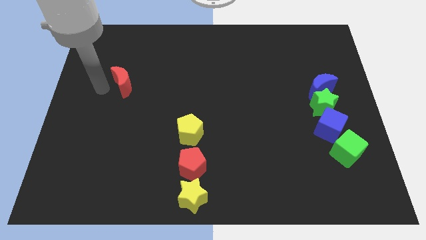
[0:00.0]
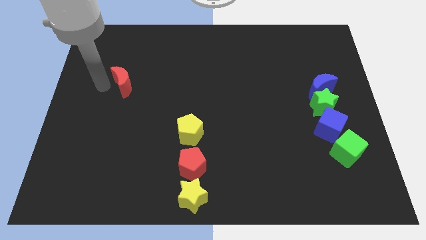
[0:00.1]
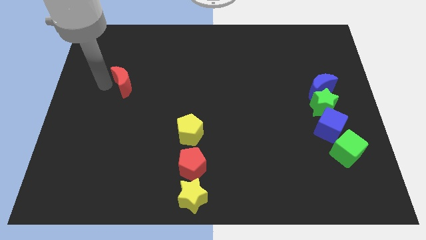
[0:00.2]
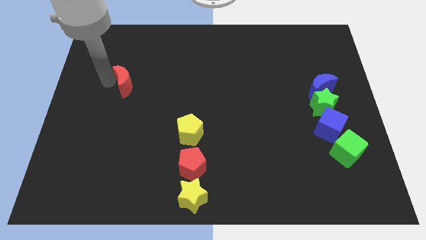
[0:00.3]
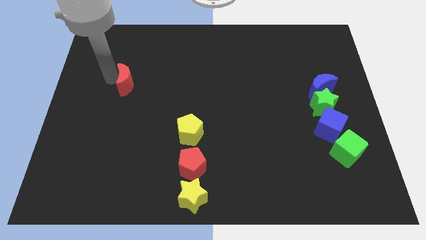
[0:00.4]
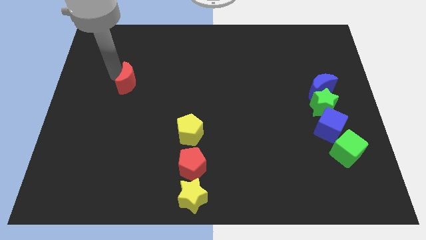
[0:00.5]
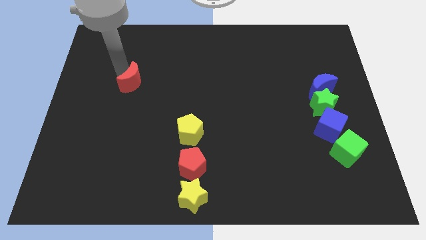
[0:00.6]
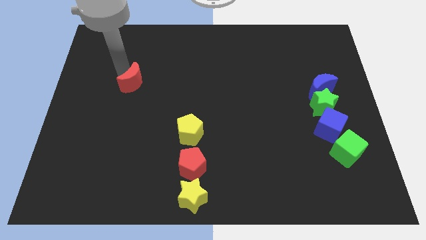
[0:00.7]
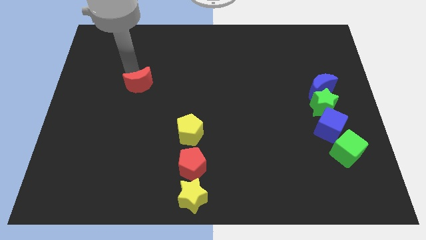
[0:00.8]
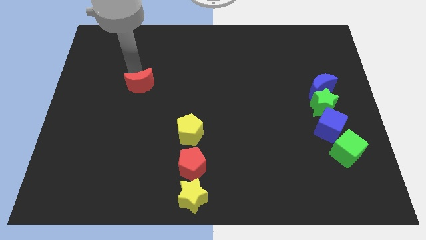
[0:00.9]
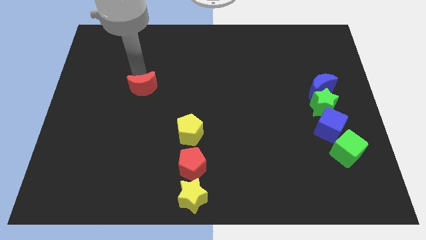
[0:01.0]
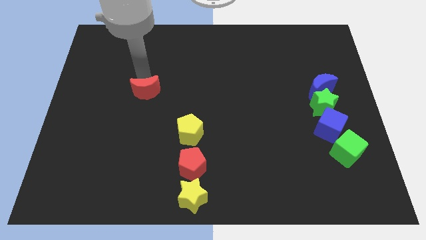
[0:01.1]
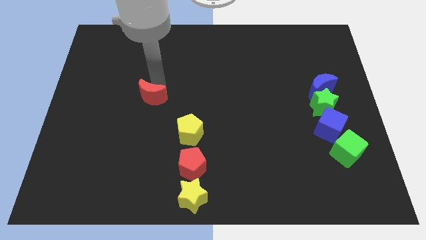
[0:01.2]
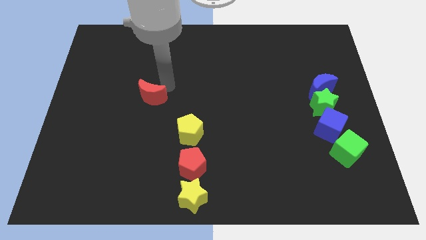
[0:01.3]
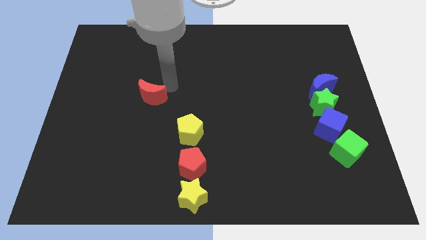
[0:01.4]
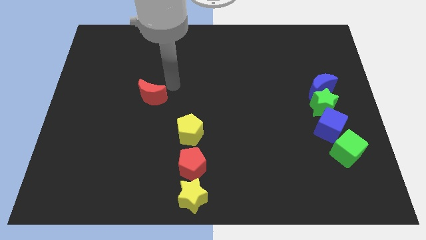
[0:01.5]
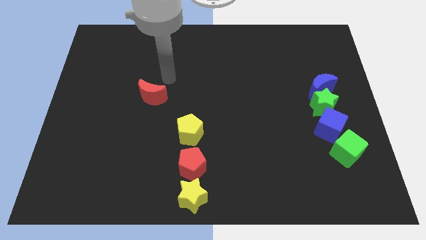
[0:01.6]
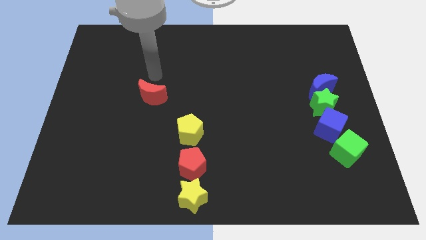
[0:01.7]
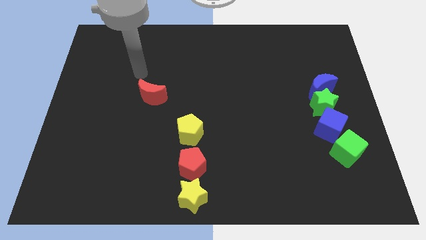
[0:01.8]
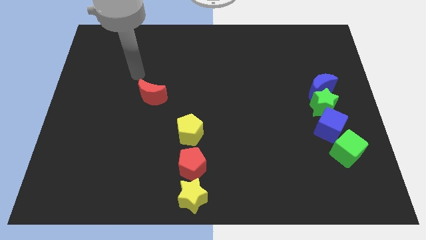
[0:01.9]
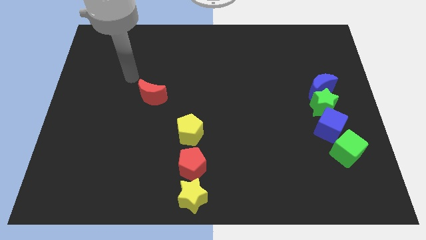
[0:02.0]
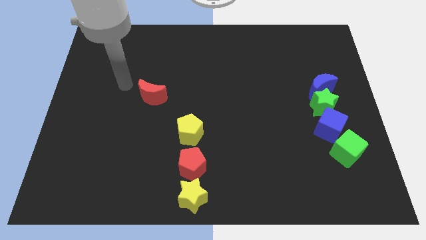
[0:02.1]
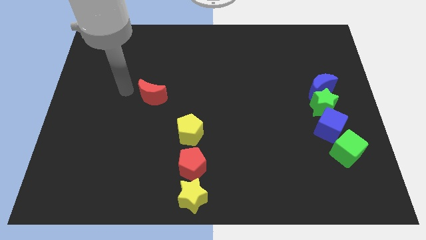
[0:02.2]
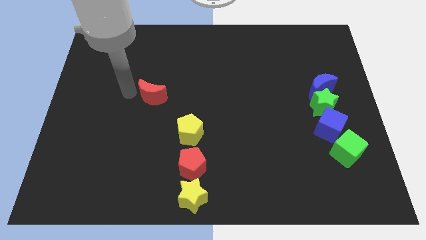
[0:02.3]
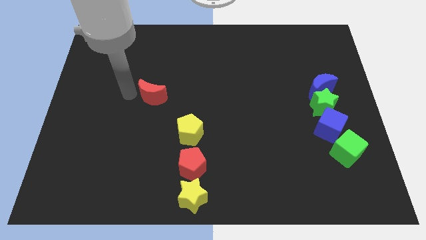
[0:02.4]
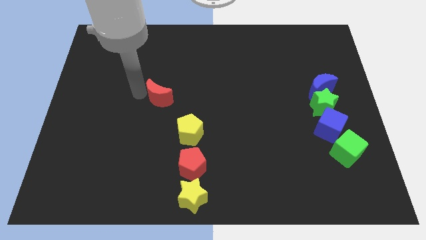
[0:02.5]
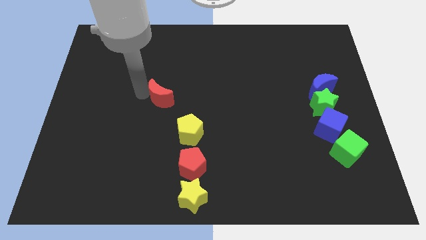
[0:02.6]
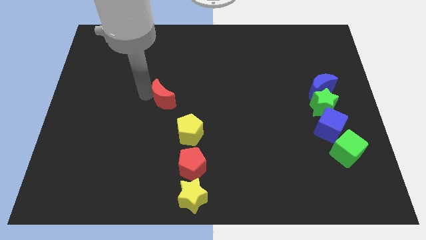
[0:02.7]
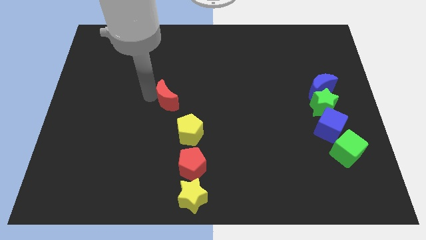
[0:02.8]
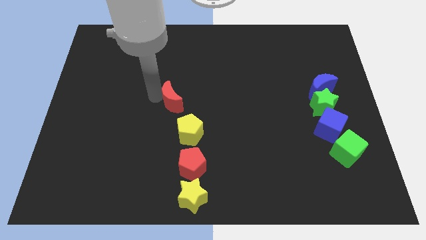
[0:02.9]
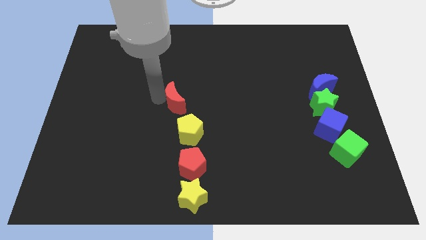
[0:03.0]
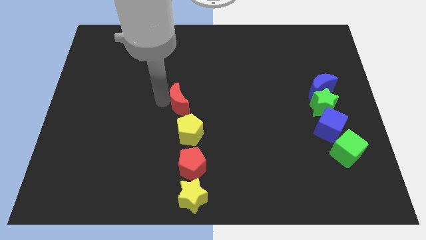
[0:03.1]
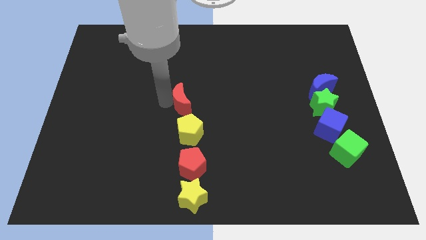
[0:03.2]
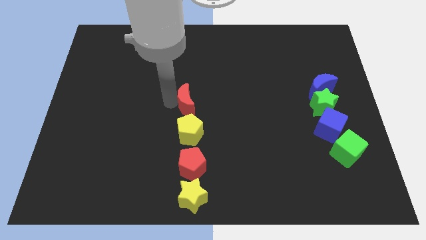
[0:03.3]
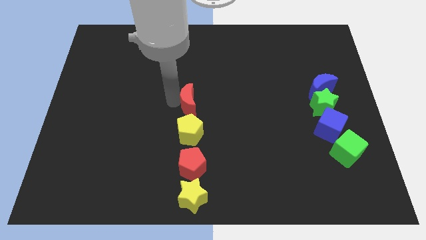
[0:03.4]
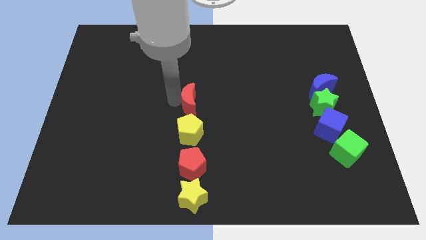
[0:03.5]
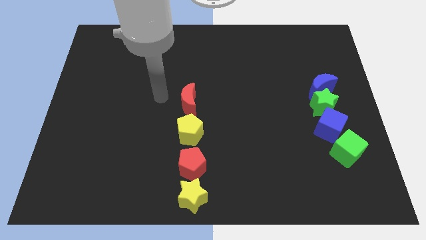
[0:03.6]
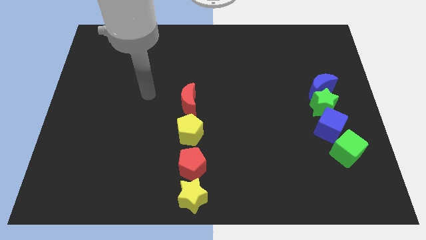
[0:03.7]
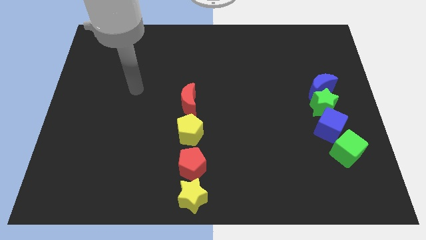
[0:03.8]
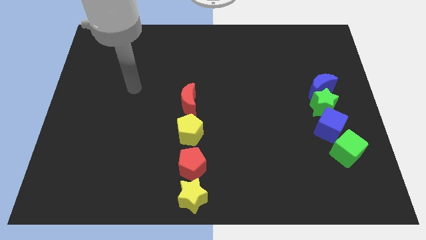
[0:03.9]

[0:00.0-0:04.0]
move the red crescent to the top of the yellow pentagon

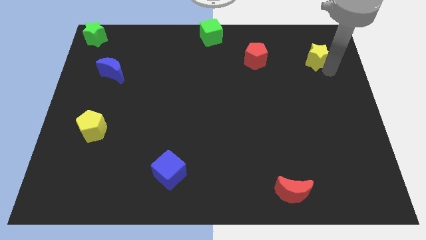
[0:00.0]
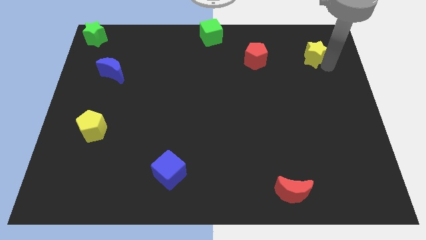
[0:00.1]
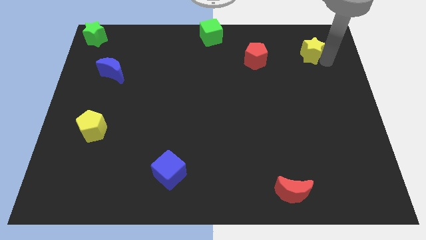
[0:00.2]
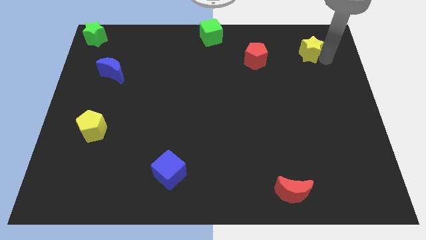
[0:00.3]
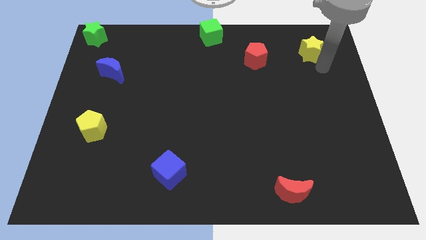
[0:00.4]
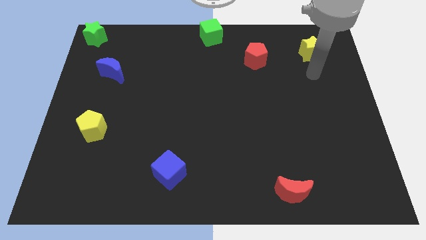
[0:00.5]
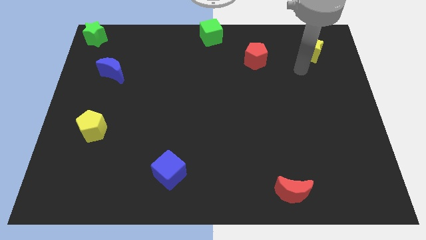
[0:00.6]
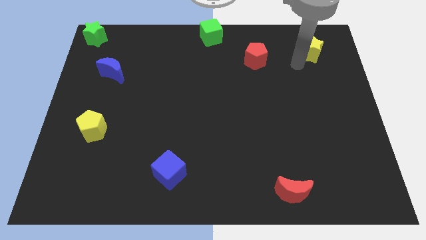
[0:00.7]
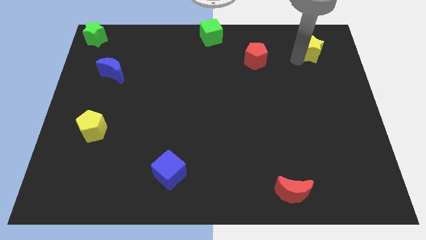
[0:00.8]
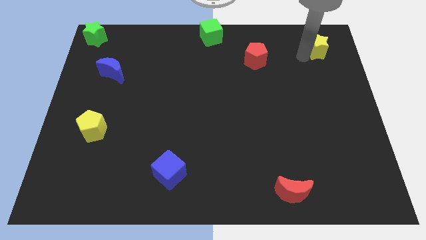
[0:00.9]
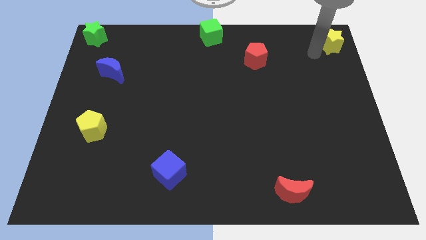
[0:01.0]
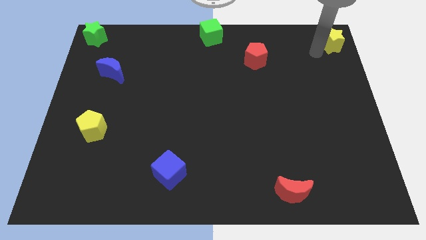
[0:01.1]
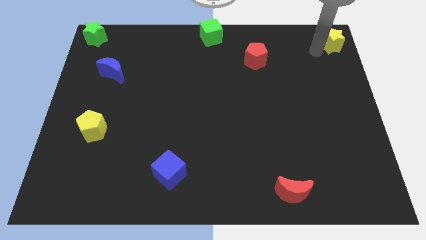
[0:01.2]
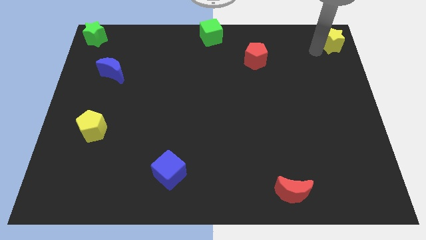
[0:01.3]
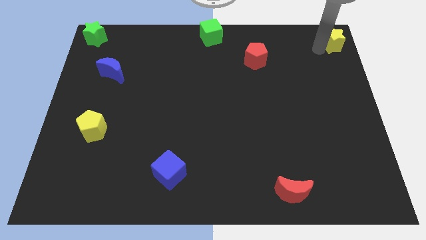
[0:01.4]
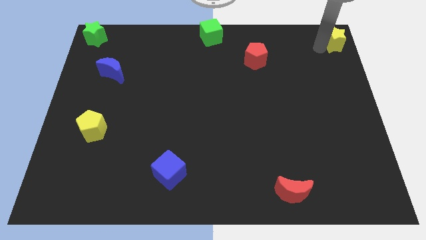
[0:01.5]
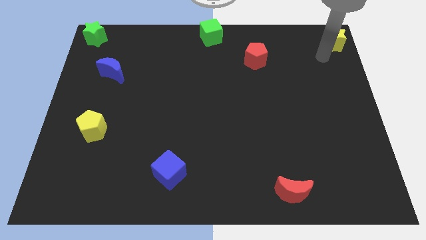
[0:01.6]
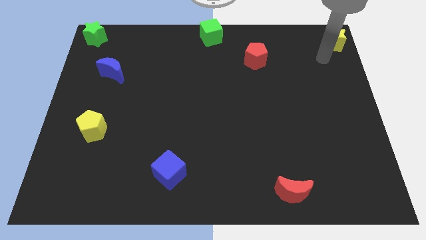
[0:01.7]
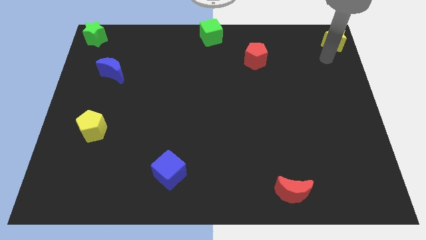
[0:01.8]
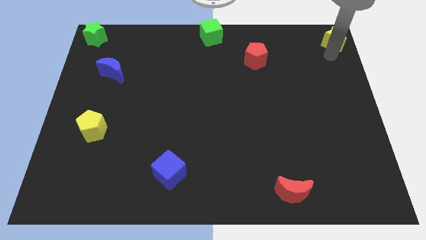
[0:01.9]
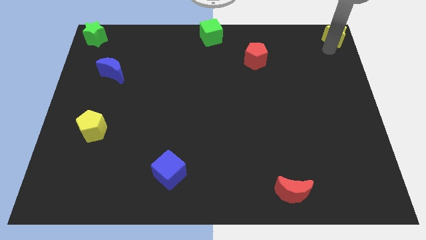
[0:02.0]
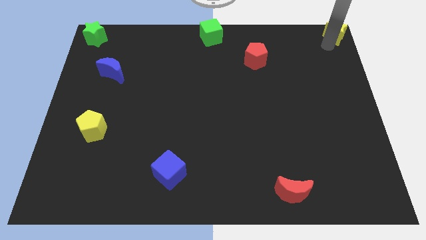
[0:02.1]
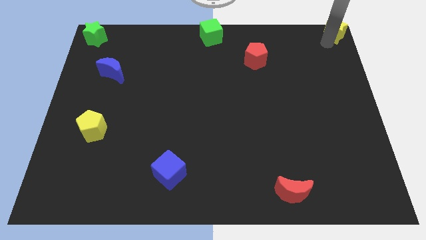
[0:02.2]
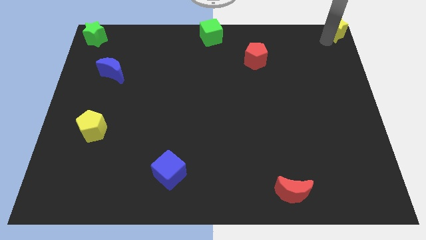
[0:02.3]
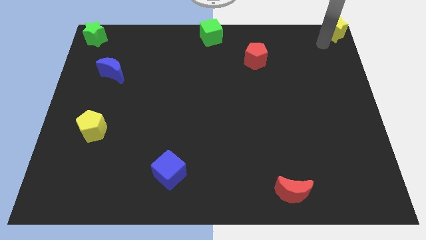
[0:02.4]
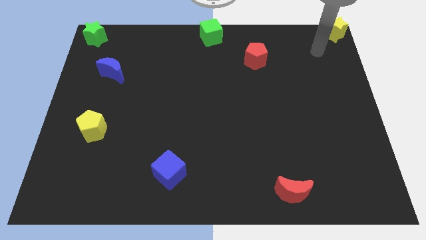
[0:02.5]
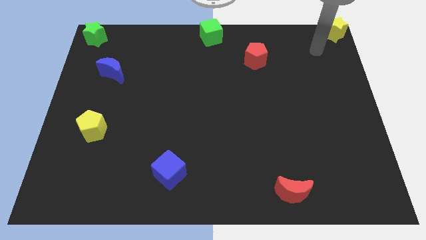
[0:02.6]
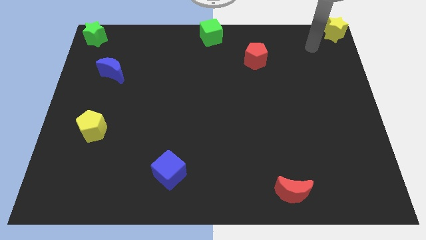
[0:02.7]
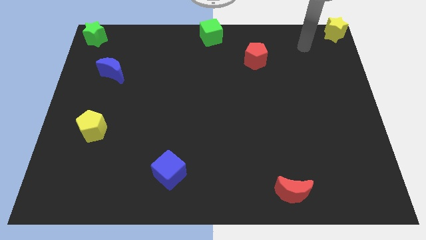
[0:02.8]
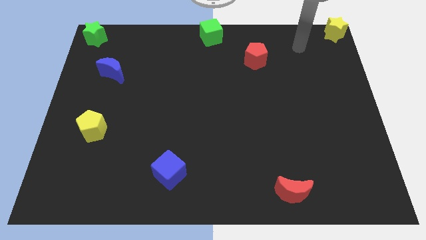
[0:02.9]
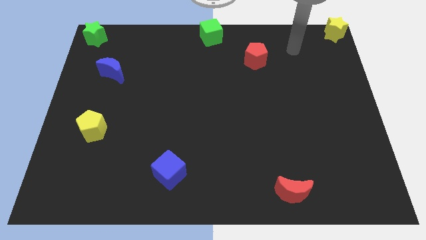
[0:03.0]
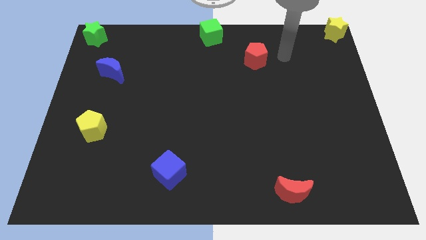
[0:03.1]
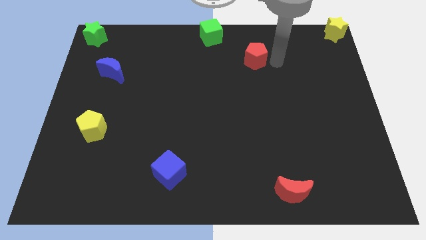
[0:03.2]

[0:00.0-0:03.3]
put the yellow star at the top right corner

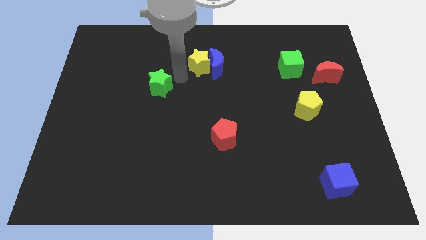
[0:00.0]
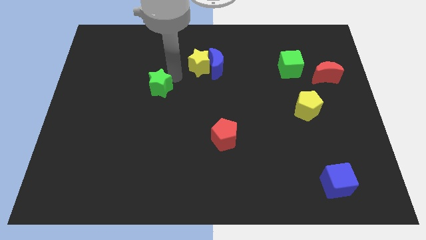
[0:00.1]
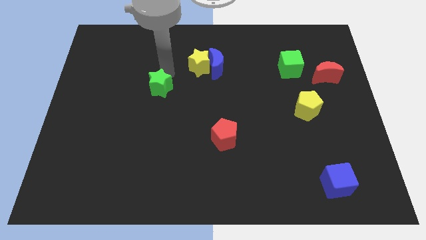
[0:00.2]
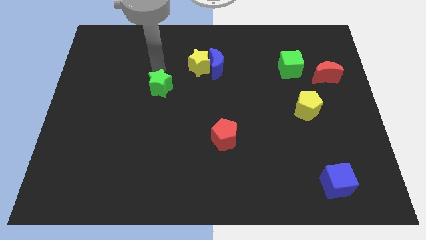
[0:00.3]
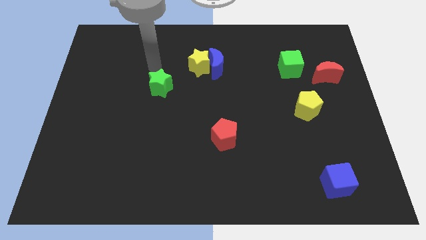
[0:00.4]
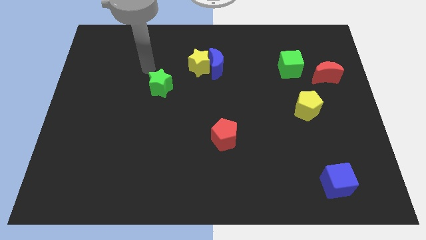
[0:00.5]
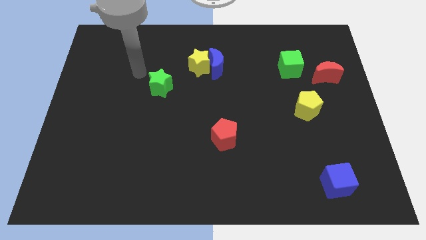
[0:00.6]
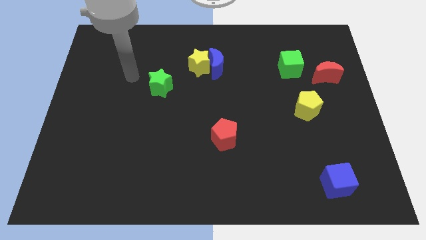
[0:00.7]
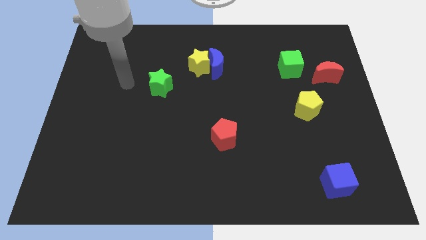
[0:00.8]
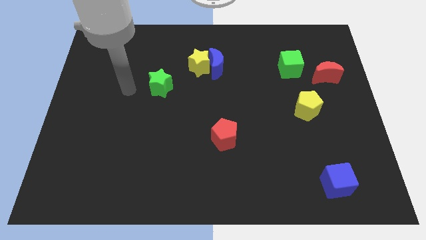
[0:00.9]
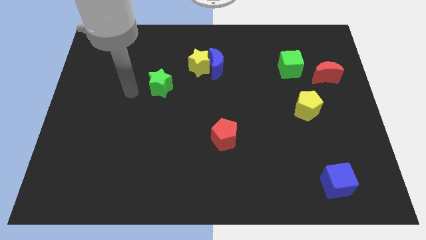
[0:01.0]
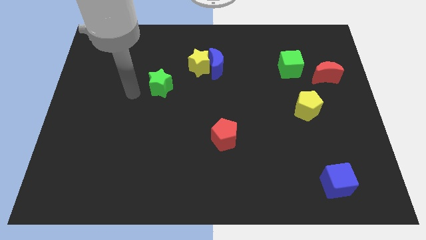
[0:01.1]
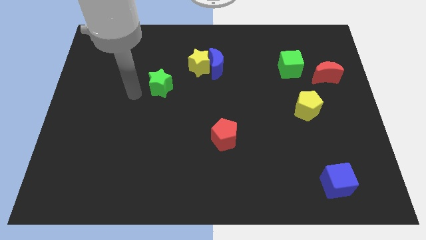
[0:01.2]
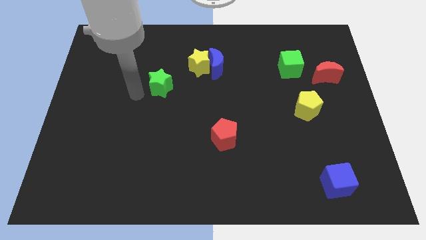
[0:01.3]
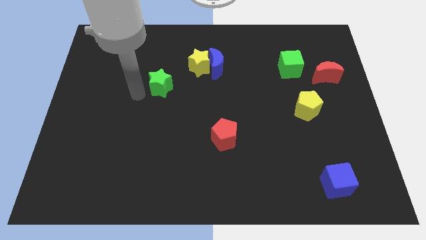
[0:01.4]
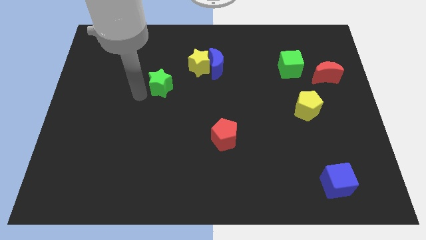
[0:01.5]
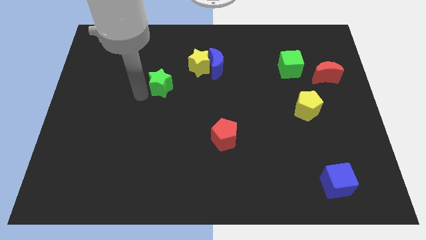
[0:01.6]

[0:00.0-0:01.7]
point your arm at the left of the green star

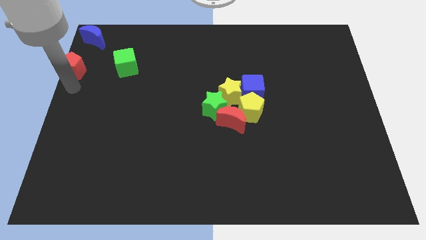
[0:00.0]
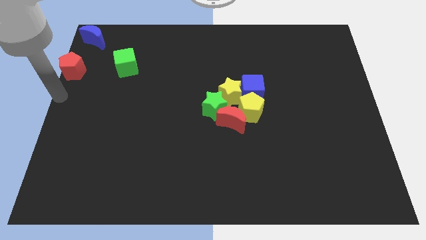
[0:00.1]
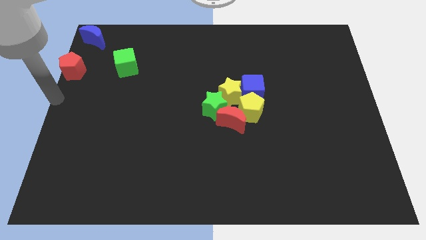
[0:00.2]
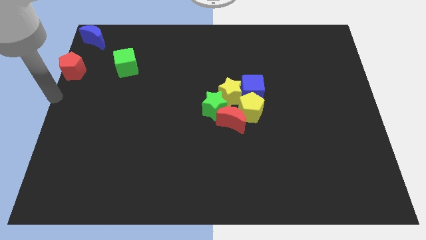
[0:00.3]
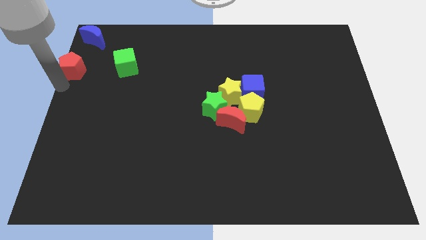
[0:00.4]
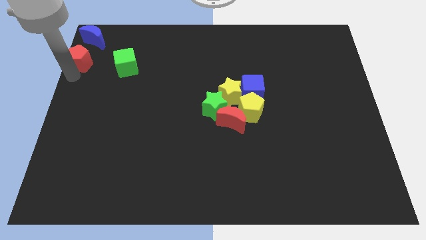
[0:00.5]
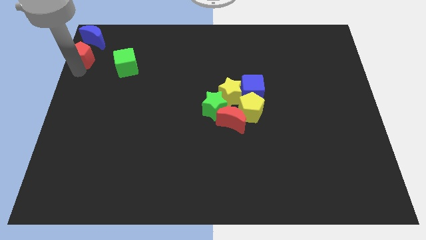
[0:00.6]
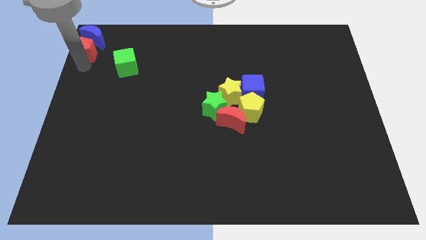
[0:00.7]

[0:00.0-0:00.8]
move the red pentagon below the blue moon
